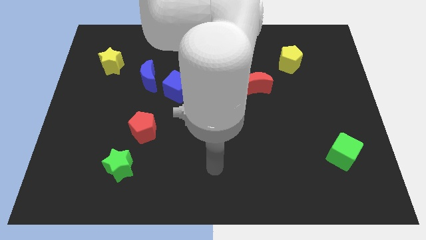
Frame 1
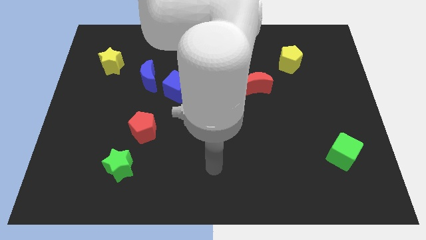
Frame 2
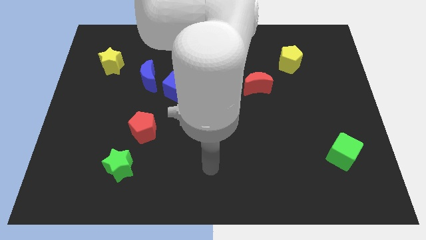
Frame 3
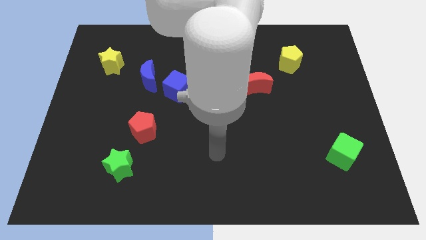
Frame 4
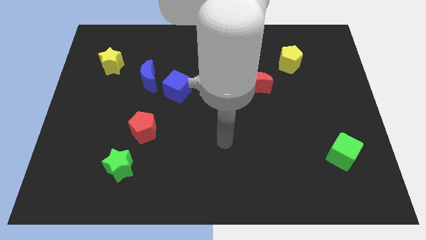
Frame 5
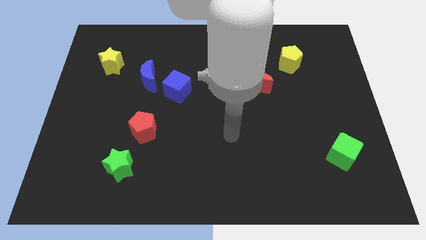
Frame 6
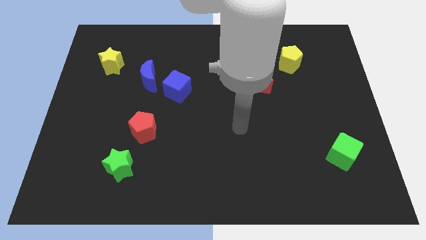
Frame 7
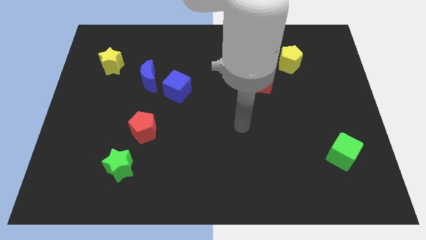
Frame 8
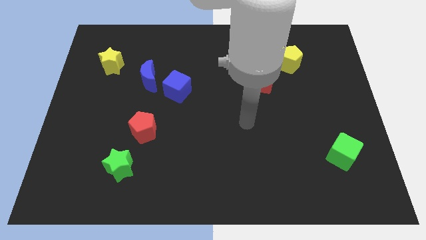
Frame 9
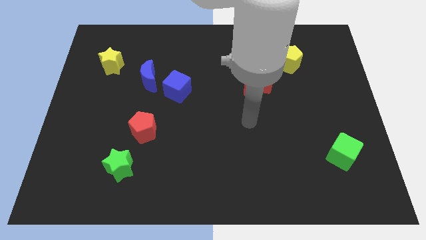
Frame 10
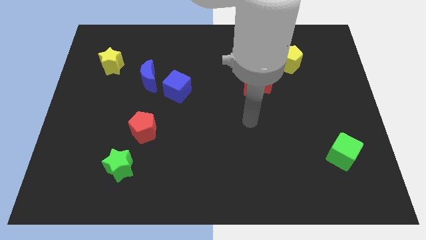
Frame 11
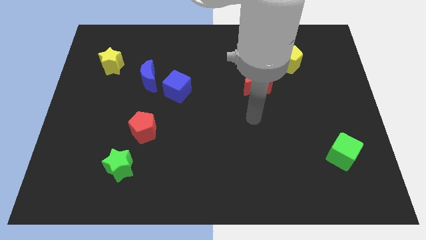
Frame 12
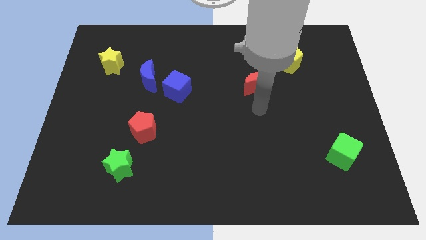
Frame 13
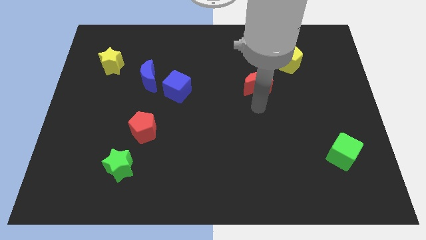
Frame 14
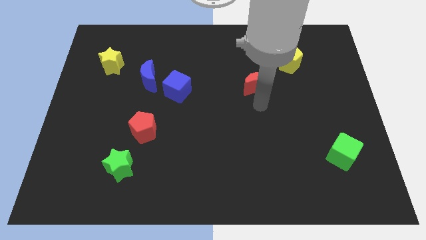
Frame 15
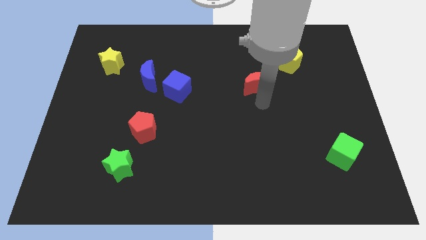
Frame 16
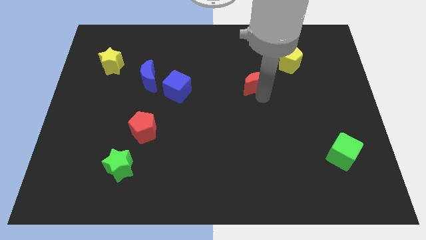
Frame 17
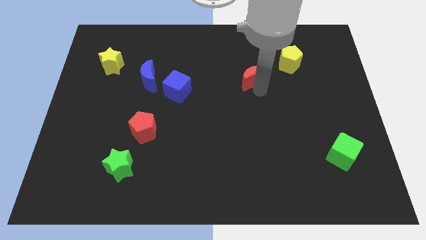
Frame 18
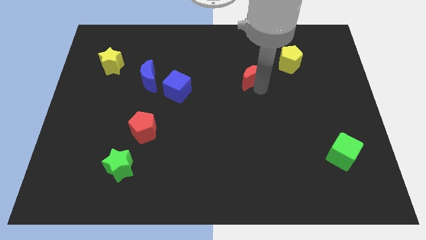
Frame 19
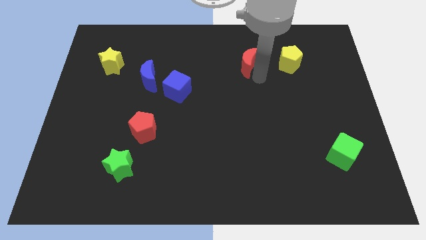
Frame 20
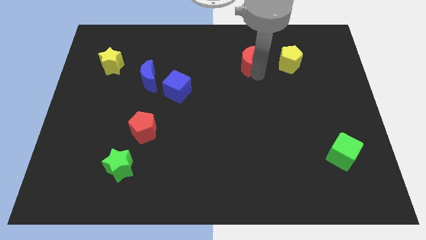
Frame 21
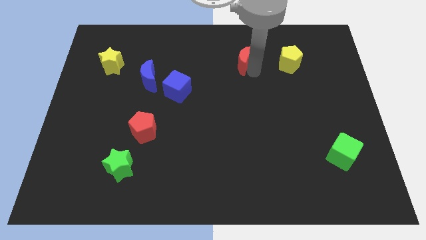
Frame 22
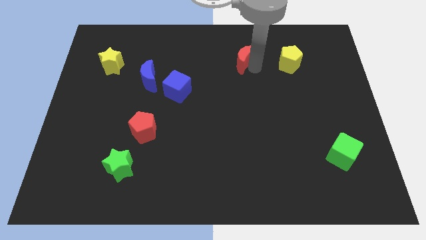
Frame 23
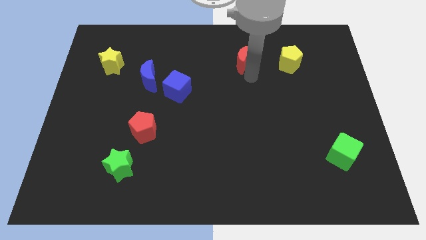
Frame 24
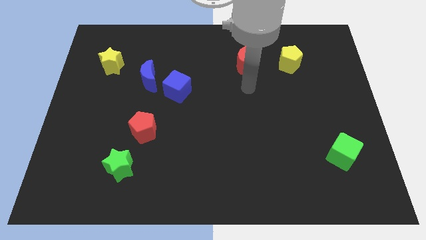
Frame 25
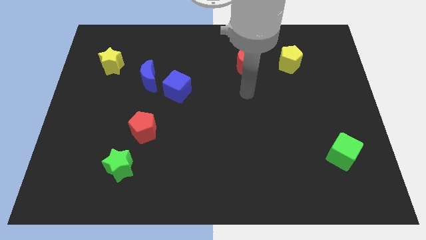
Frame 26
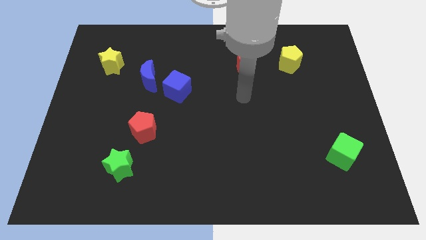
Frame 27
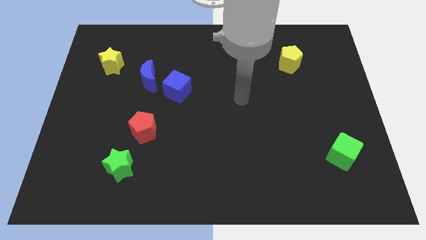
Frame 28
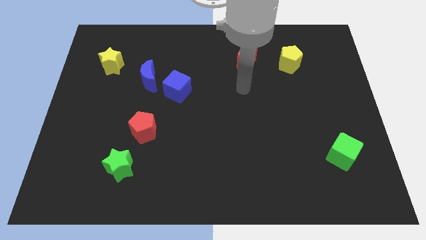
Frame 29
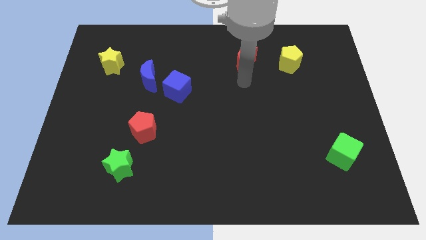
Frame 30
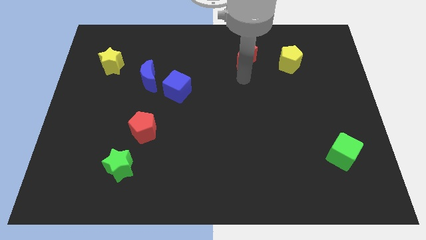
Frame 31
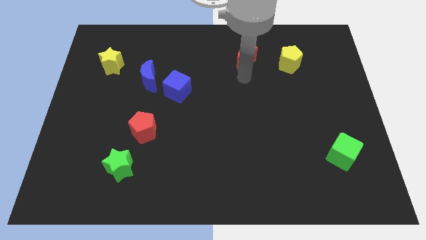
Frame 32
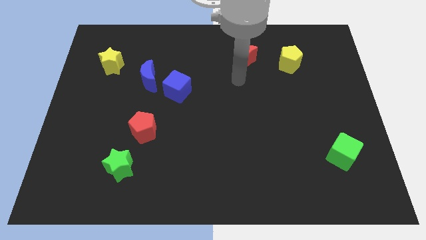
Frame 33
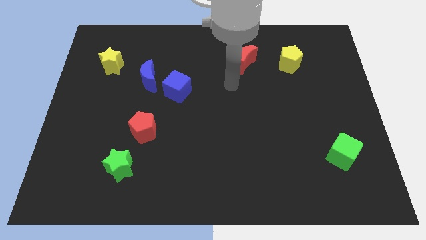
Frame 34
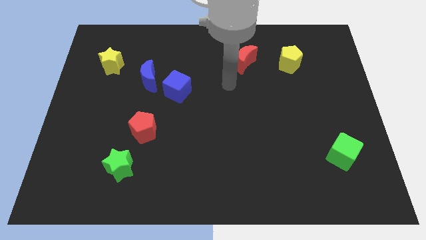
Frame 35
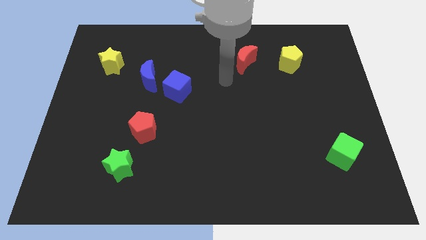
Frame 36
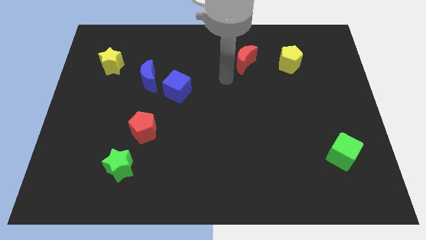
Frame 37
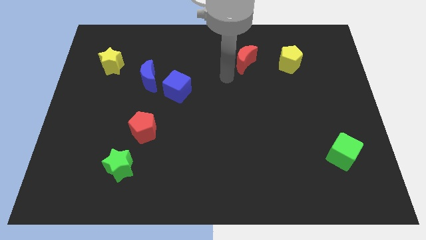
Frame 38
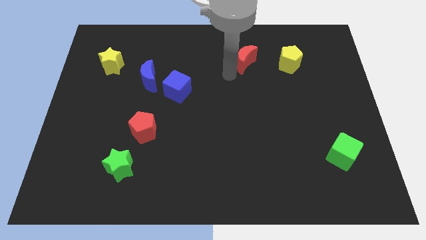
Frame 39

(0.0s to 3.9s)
move the red moon to the left of the yellow pentagon

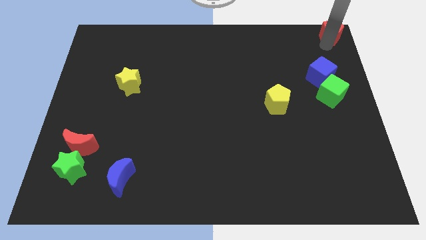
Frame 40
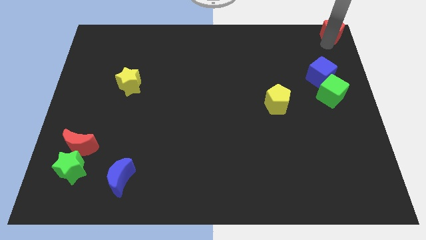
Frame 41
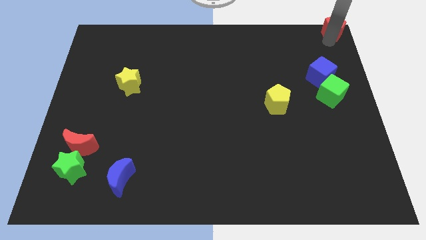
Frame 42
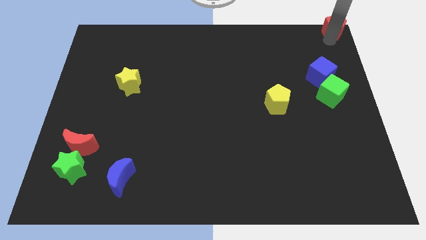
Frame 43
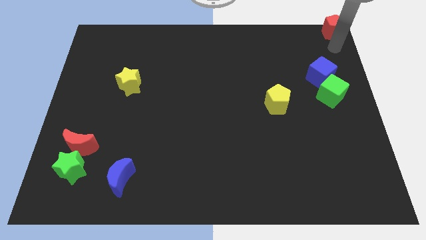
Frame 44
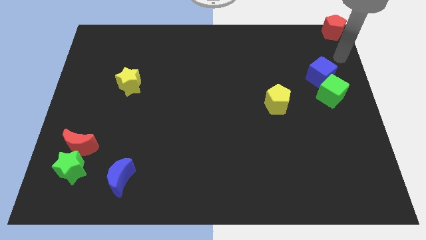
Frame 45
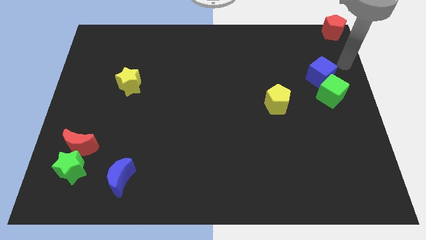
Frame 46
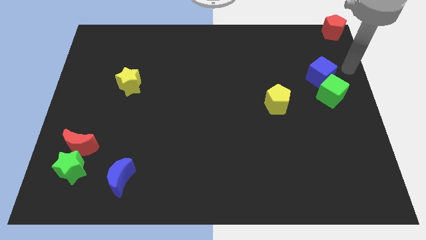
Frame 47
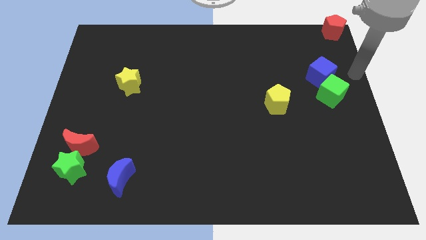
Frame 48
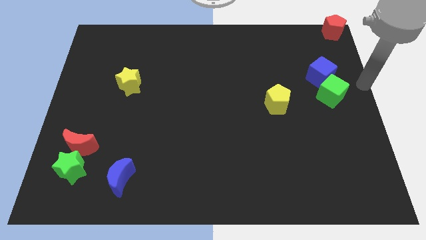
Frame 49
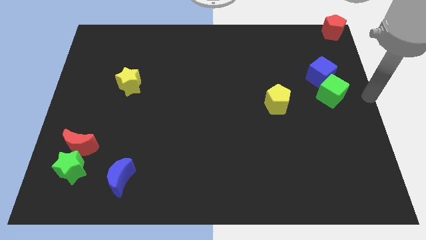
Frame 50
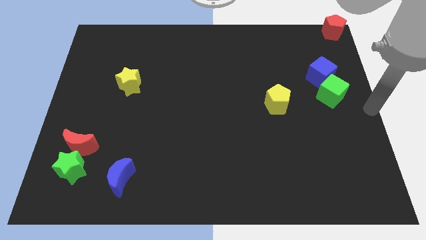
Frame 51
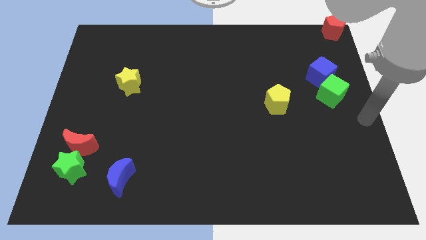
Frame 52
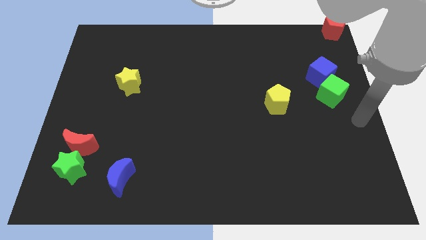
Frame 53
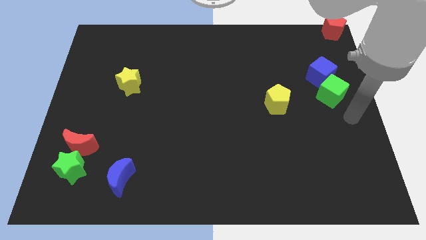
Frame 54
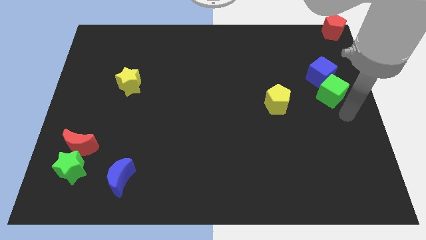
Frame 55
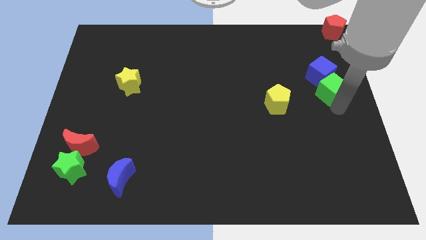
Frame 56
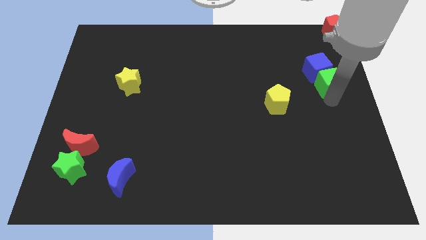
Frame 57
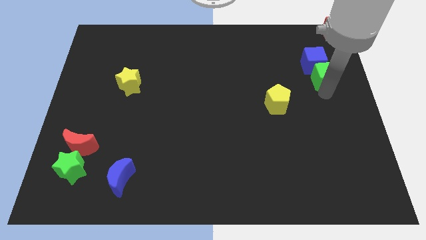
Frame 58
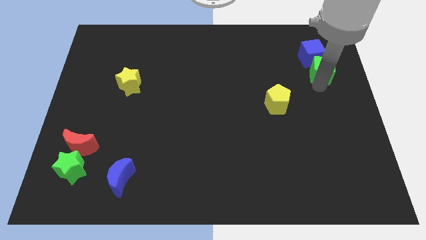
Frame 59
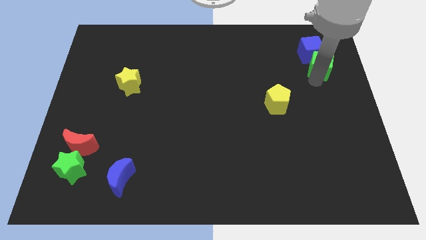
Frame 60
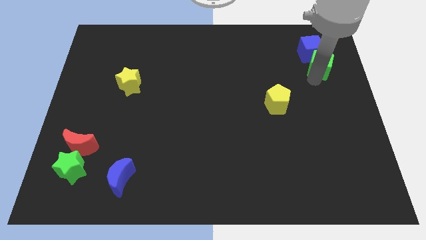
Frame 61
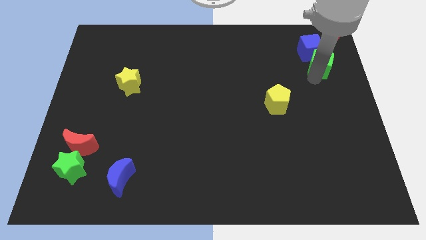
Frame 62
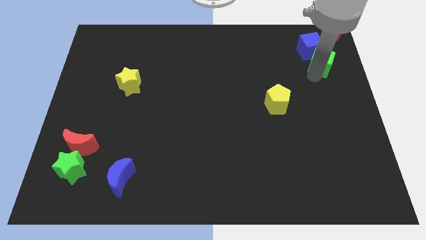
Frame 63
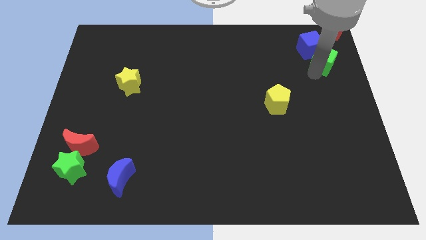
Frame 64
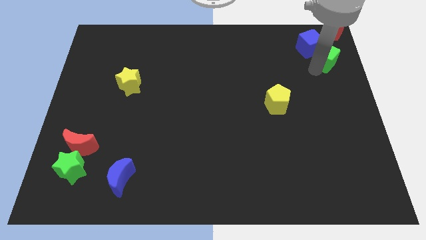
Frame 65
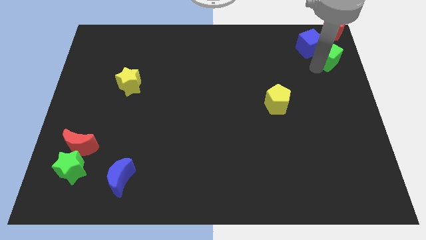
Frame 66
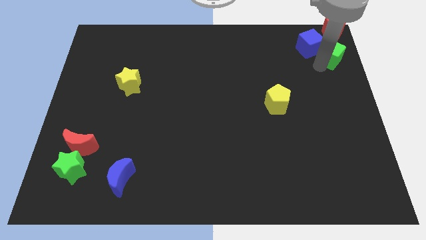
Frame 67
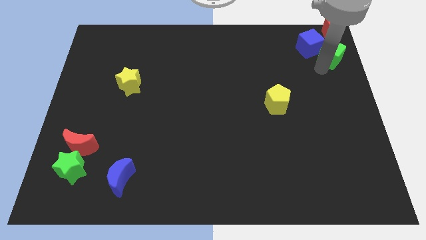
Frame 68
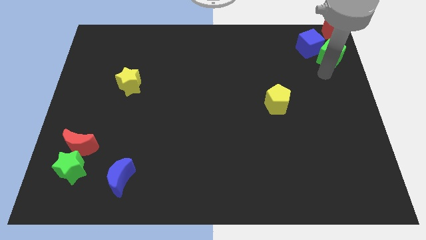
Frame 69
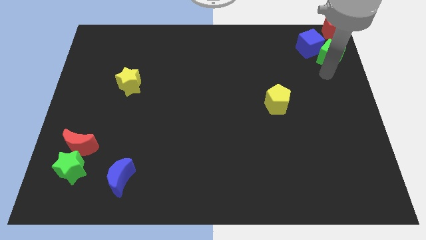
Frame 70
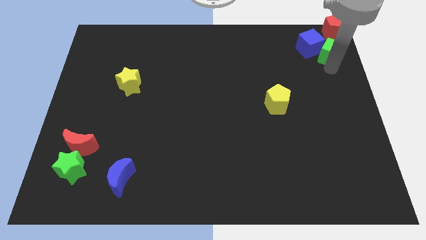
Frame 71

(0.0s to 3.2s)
push the blue cube with green cube to the top right of the board

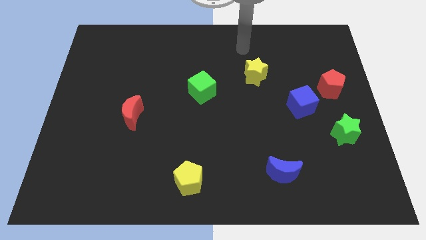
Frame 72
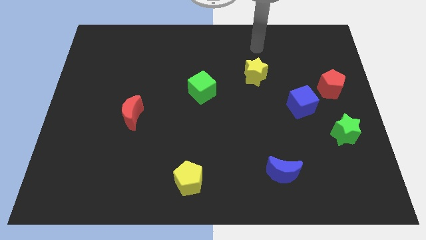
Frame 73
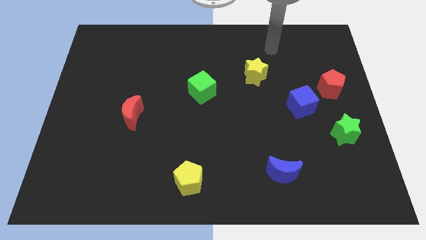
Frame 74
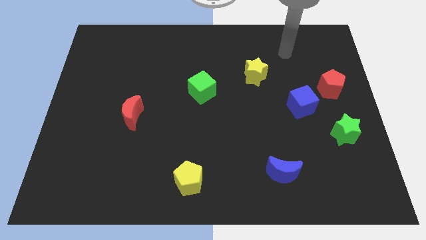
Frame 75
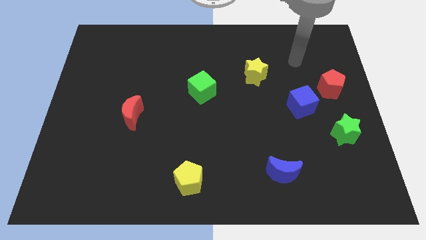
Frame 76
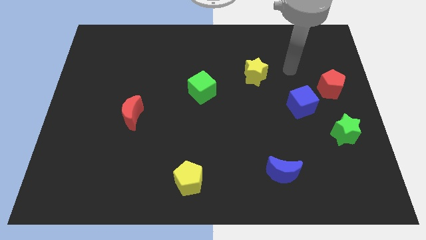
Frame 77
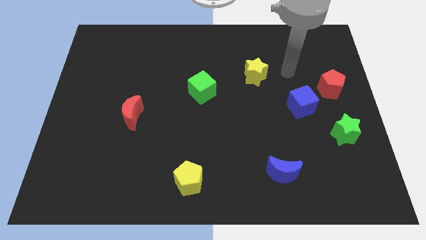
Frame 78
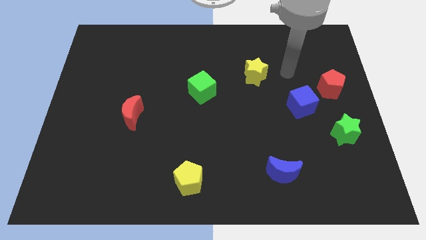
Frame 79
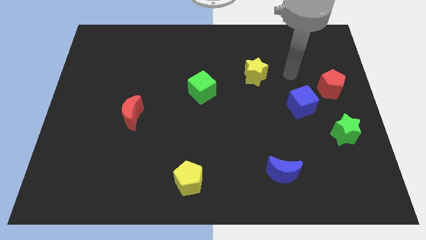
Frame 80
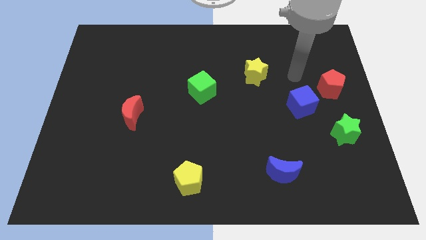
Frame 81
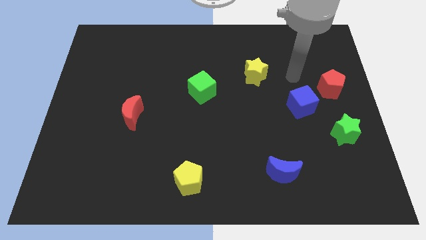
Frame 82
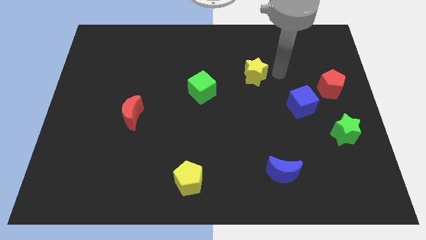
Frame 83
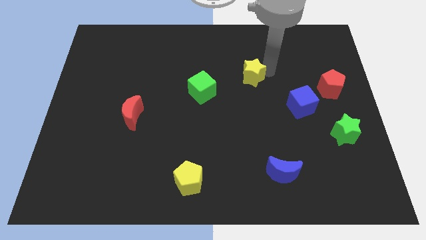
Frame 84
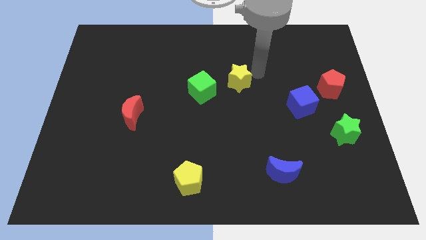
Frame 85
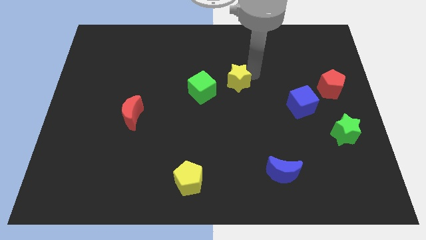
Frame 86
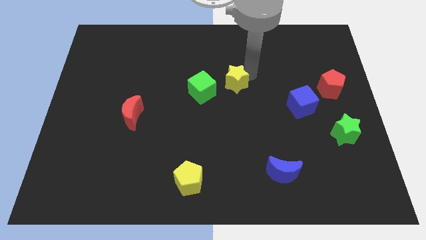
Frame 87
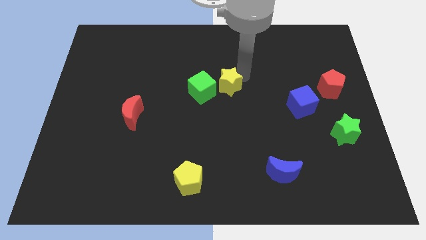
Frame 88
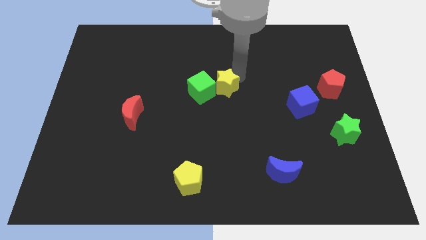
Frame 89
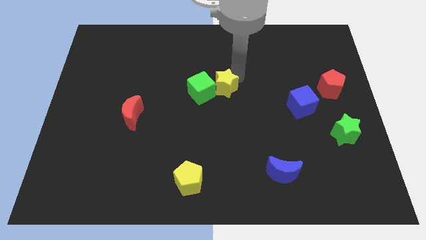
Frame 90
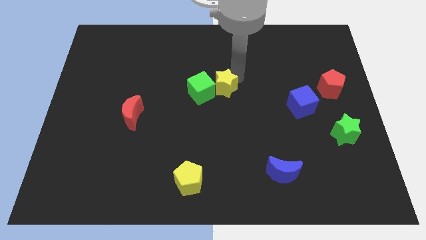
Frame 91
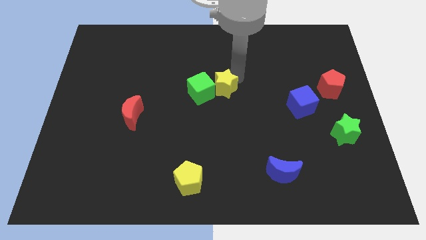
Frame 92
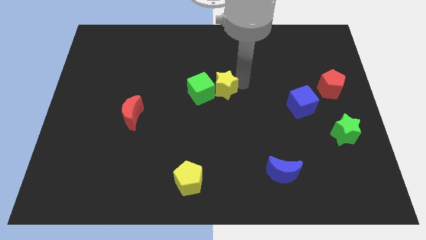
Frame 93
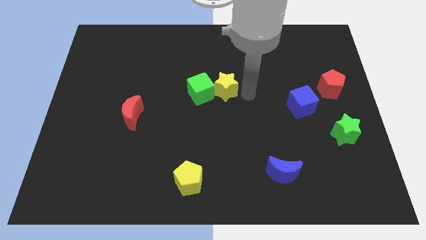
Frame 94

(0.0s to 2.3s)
push the yellow star into green cube to the right
